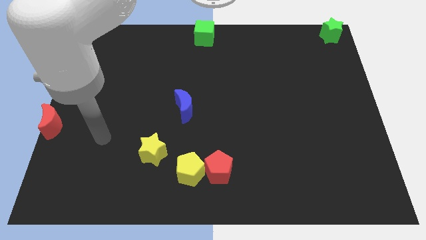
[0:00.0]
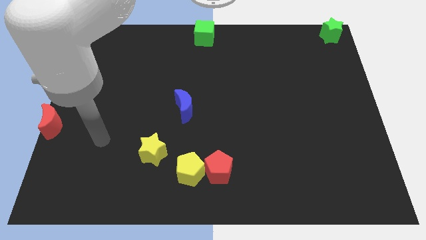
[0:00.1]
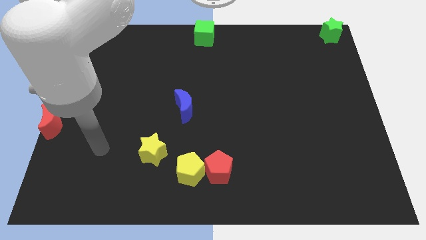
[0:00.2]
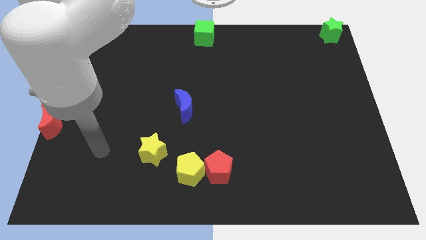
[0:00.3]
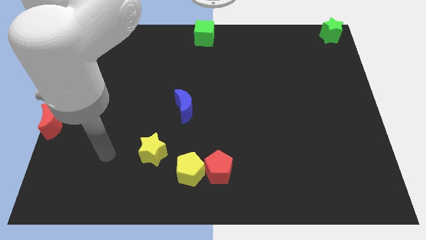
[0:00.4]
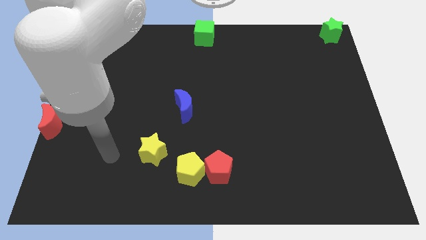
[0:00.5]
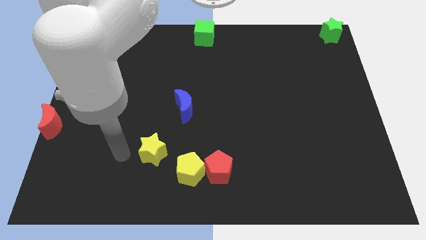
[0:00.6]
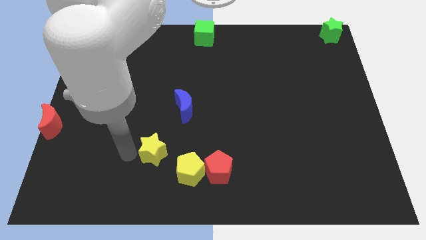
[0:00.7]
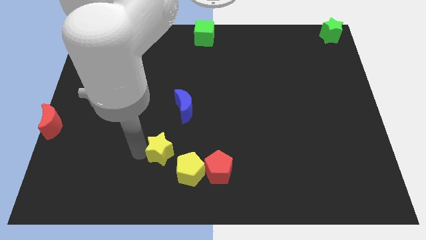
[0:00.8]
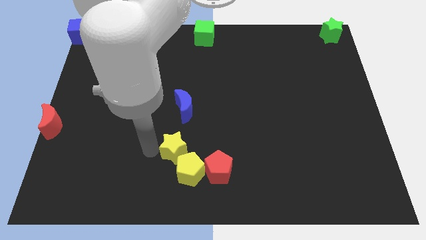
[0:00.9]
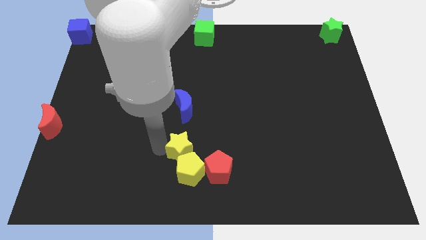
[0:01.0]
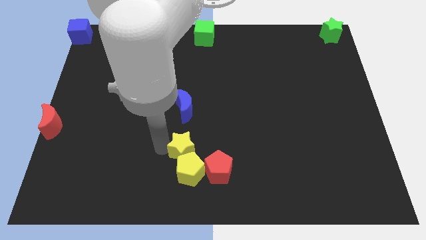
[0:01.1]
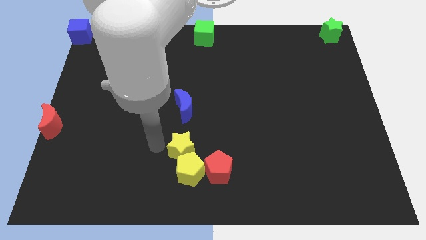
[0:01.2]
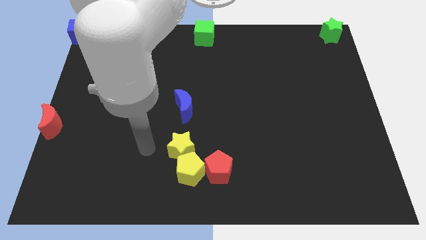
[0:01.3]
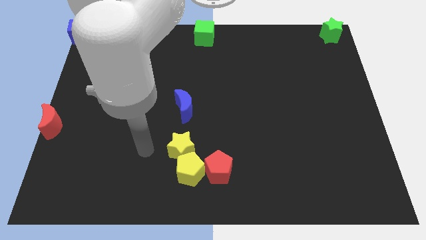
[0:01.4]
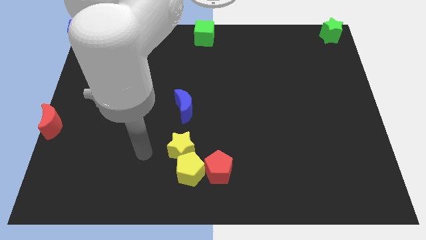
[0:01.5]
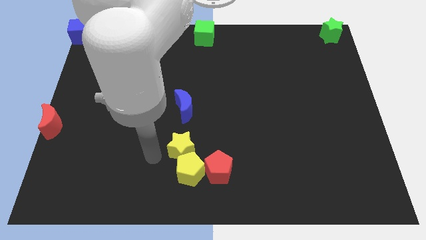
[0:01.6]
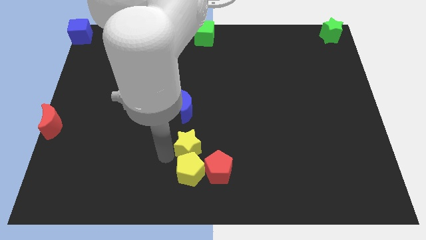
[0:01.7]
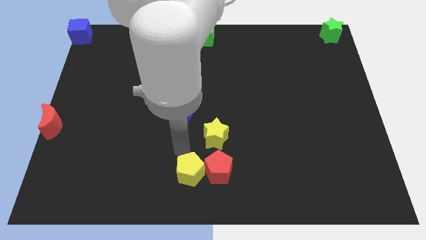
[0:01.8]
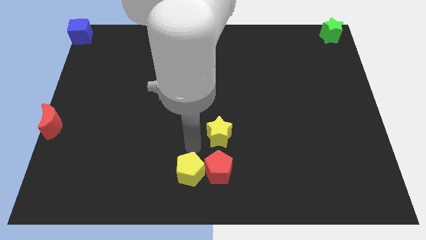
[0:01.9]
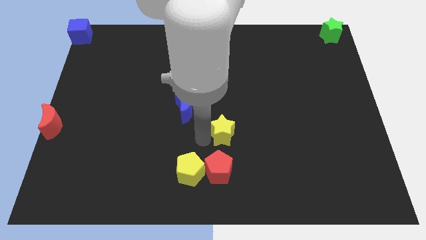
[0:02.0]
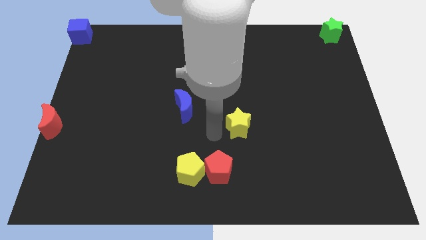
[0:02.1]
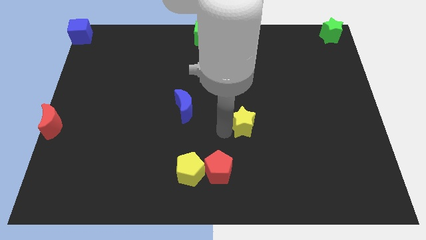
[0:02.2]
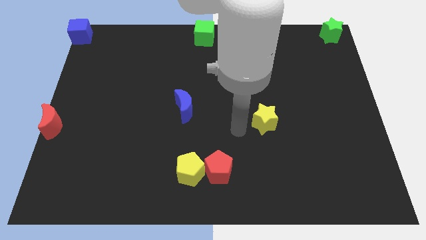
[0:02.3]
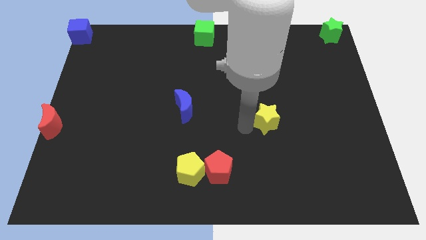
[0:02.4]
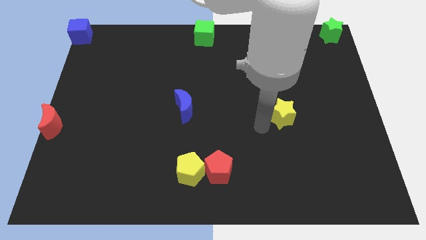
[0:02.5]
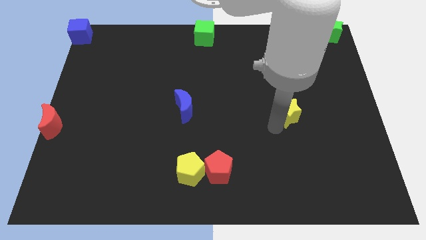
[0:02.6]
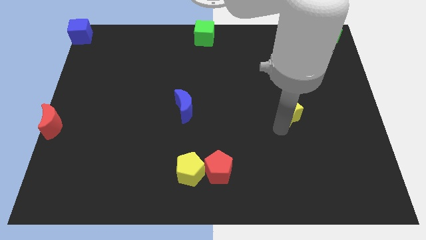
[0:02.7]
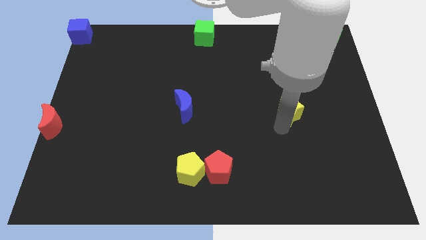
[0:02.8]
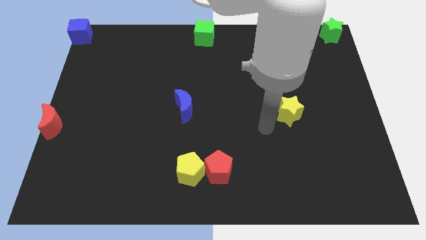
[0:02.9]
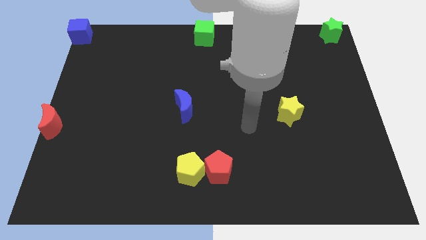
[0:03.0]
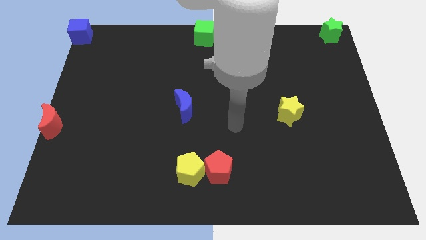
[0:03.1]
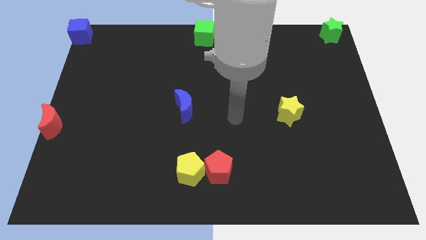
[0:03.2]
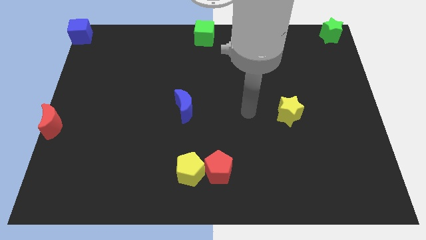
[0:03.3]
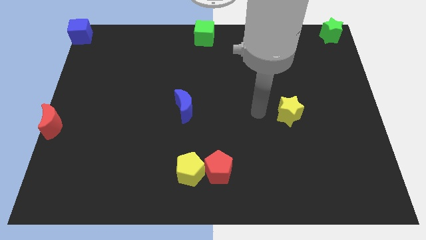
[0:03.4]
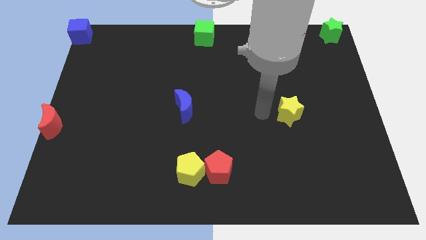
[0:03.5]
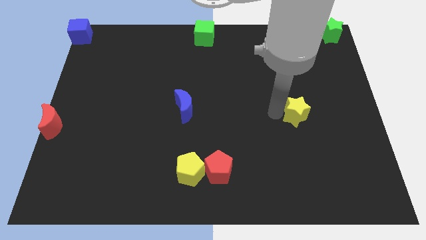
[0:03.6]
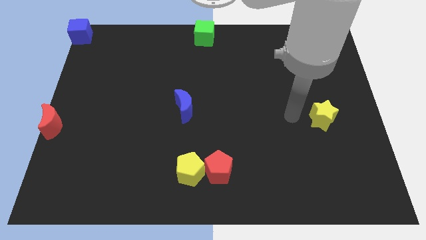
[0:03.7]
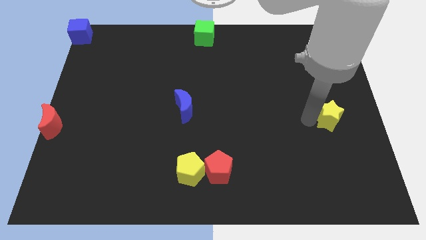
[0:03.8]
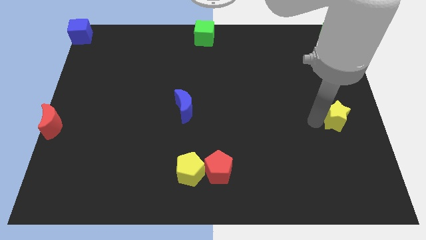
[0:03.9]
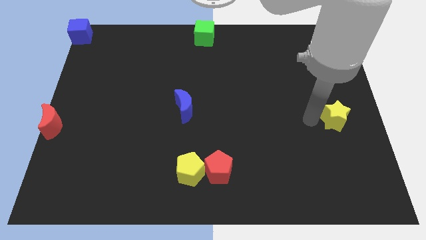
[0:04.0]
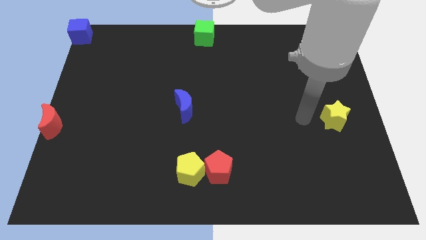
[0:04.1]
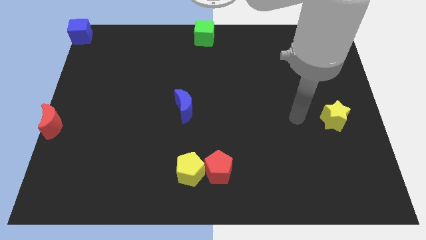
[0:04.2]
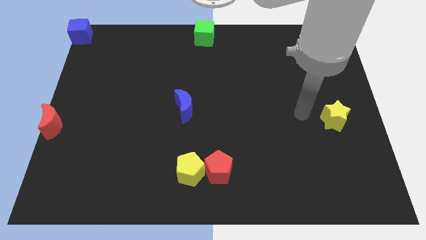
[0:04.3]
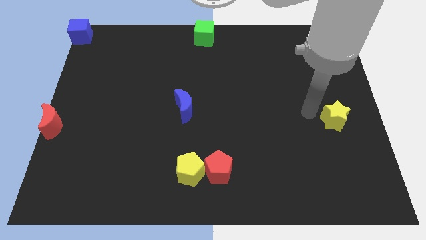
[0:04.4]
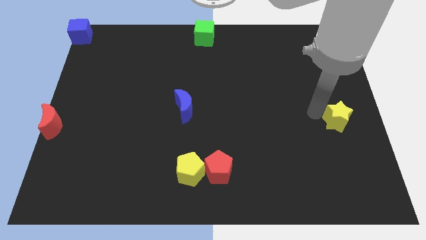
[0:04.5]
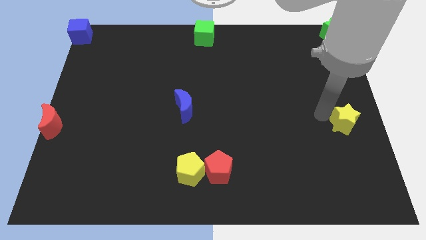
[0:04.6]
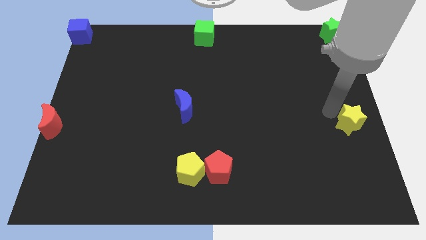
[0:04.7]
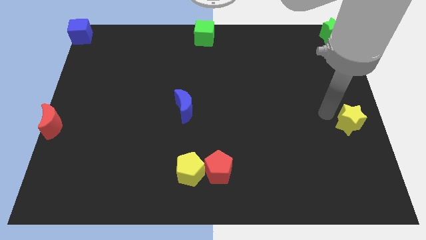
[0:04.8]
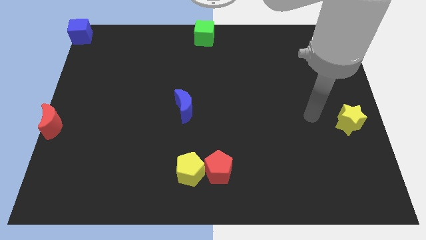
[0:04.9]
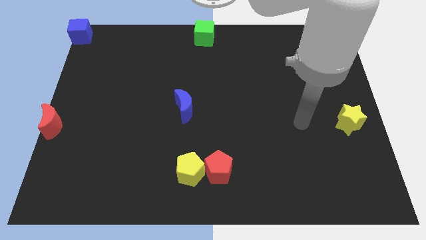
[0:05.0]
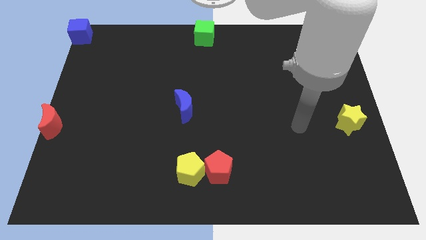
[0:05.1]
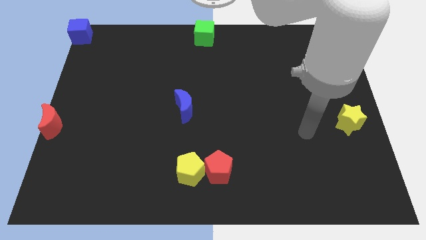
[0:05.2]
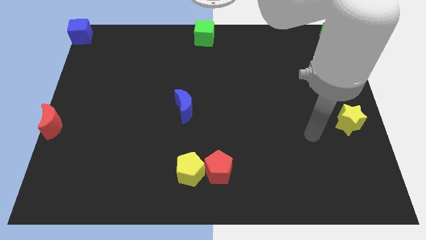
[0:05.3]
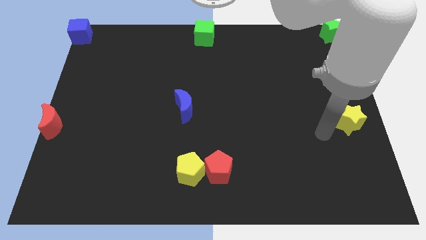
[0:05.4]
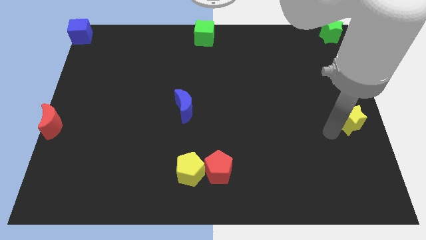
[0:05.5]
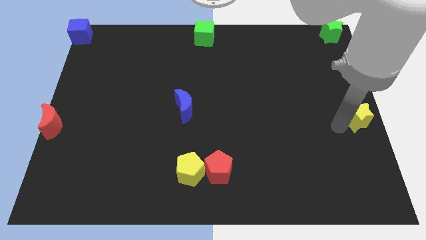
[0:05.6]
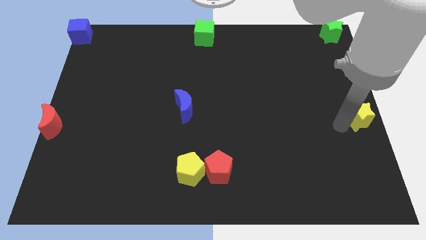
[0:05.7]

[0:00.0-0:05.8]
move yellow star to the right centre of the board

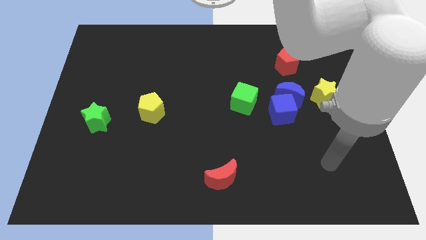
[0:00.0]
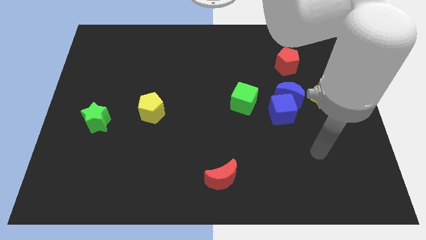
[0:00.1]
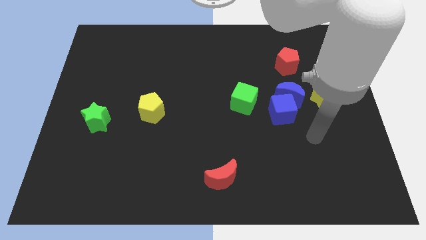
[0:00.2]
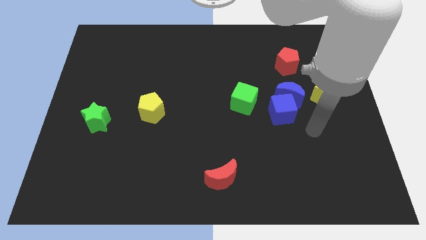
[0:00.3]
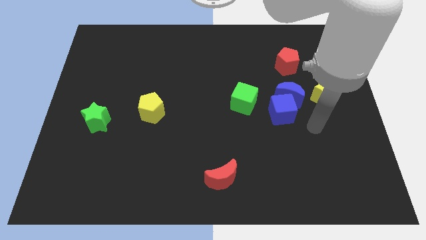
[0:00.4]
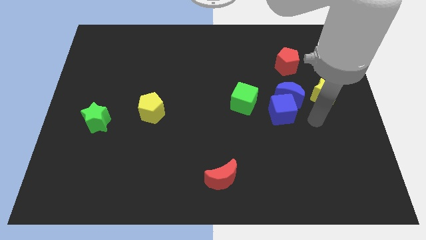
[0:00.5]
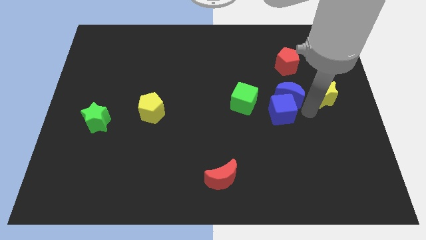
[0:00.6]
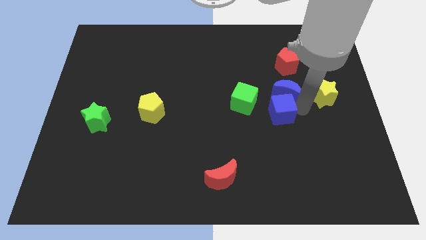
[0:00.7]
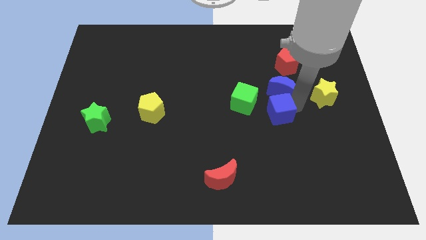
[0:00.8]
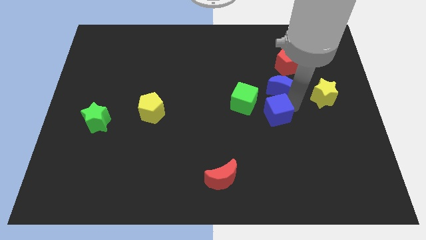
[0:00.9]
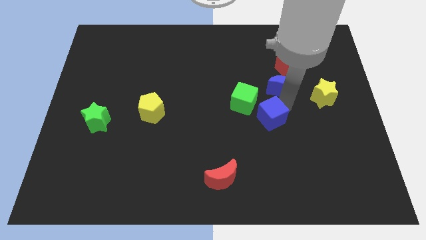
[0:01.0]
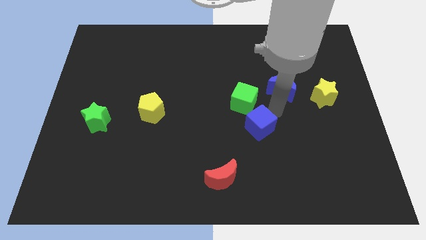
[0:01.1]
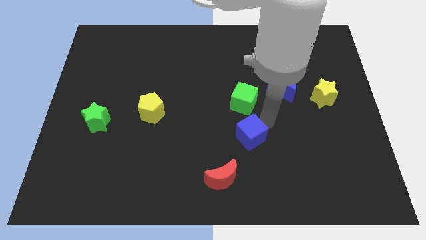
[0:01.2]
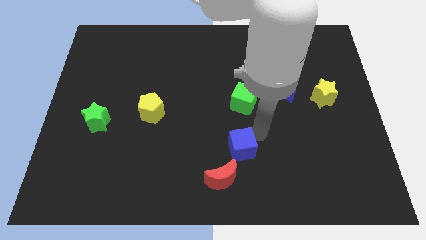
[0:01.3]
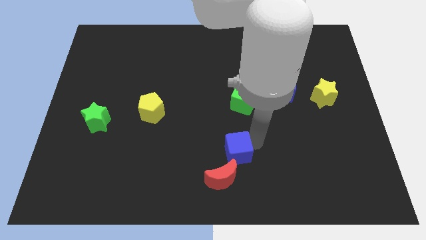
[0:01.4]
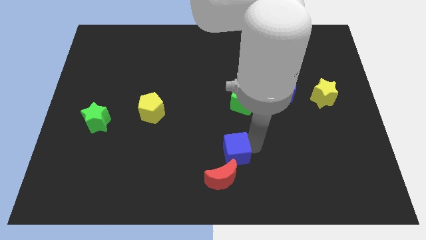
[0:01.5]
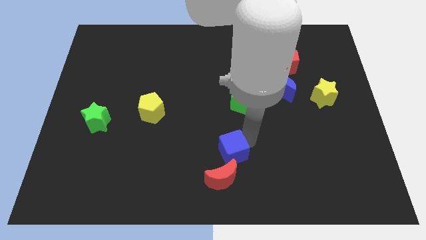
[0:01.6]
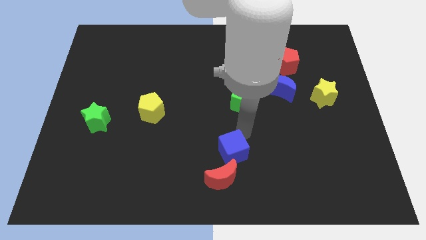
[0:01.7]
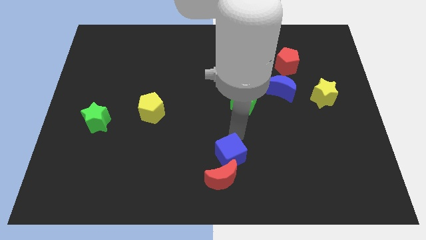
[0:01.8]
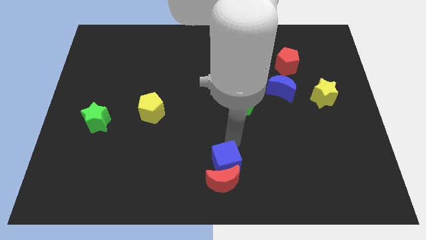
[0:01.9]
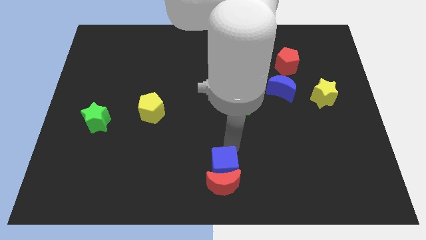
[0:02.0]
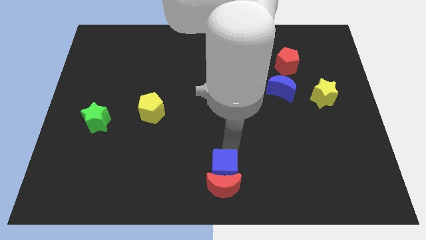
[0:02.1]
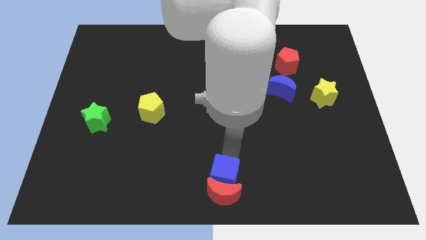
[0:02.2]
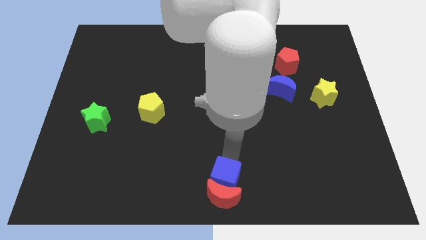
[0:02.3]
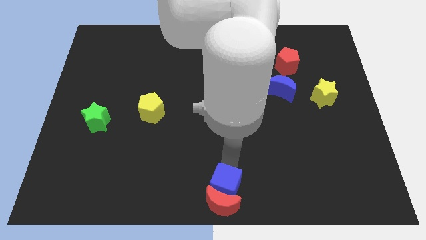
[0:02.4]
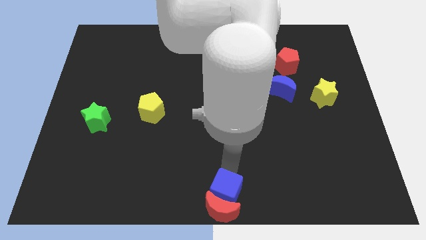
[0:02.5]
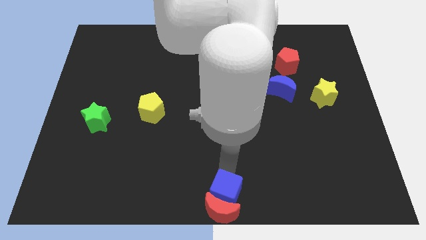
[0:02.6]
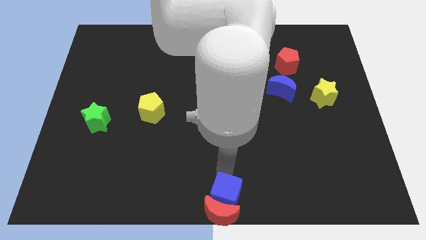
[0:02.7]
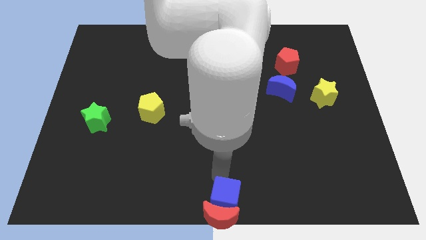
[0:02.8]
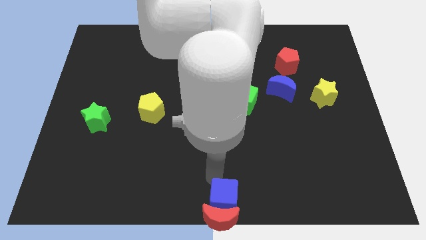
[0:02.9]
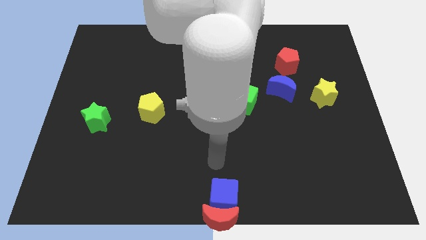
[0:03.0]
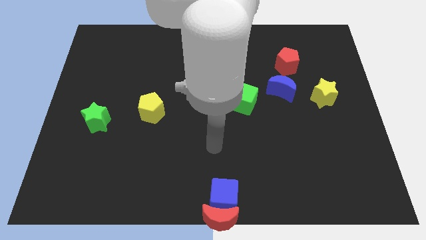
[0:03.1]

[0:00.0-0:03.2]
push the red moon with a blue cube to the bottom middle of the board
